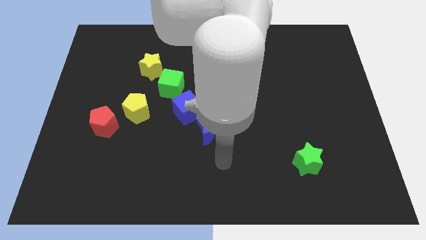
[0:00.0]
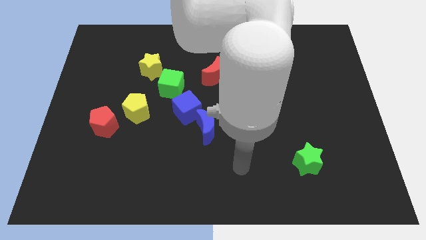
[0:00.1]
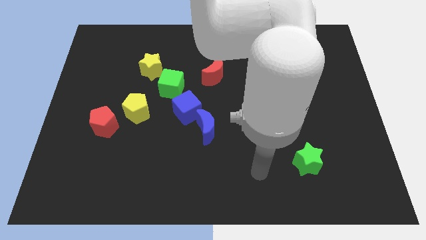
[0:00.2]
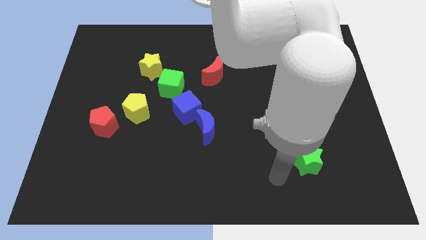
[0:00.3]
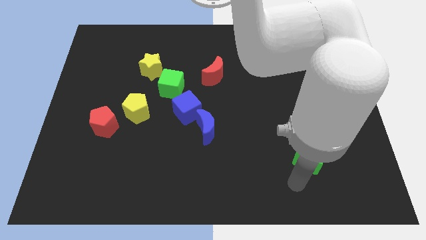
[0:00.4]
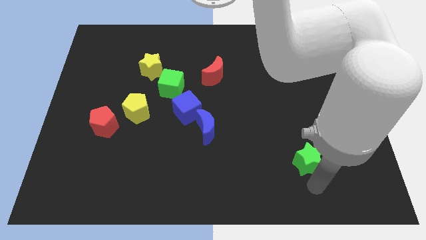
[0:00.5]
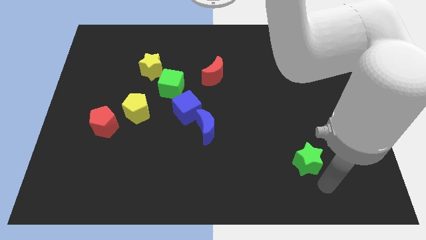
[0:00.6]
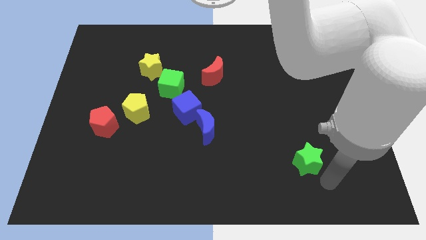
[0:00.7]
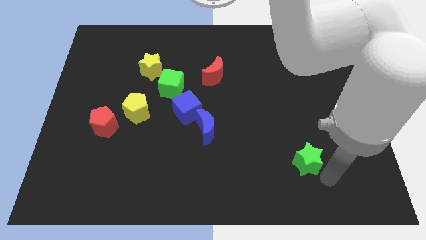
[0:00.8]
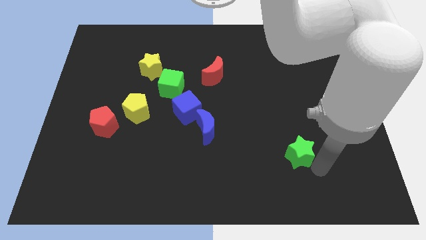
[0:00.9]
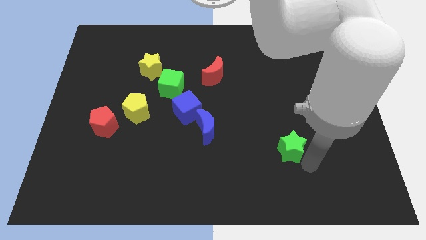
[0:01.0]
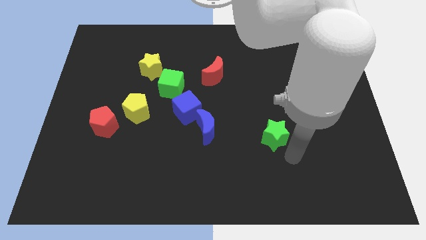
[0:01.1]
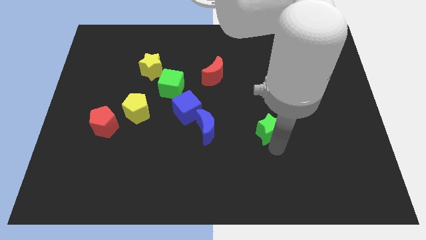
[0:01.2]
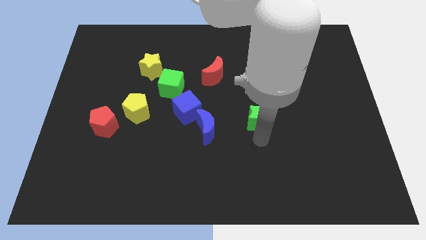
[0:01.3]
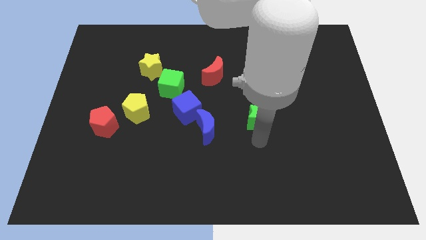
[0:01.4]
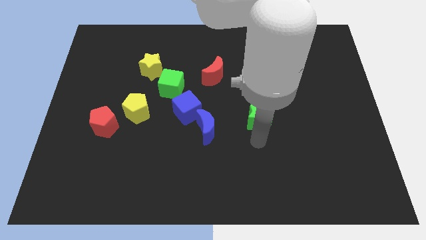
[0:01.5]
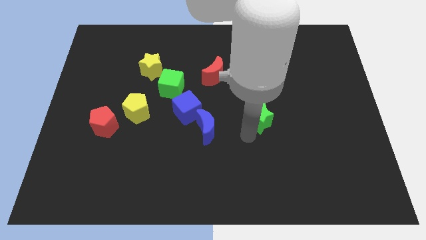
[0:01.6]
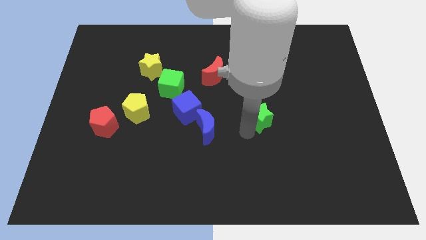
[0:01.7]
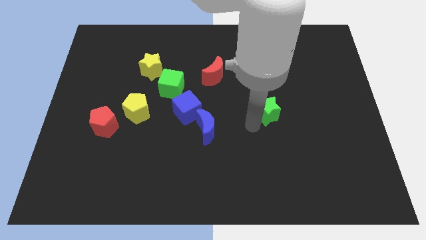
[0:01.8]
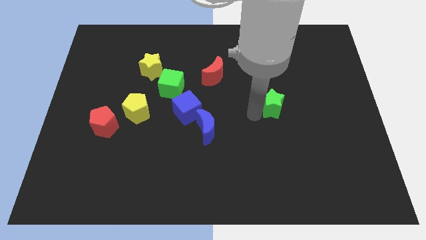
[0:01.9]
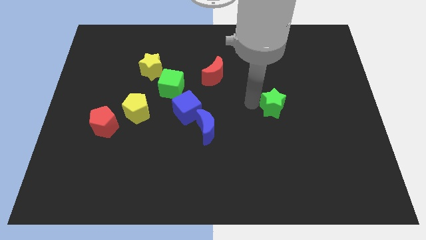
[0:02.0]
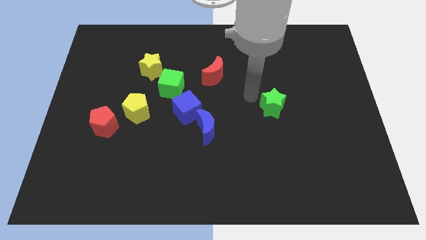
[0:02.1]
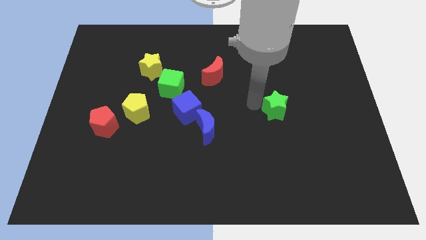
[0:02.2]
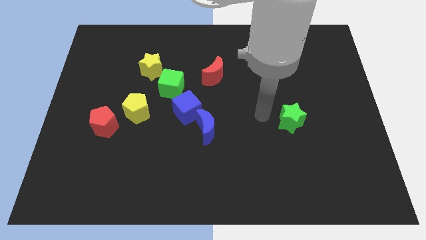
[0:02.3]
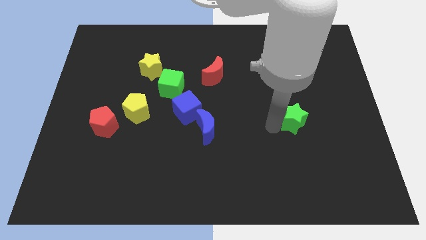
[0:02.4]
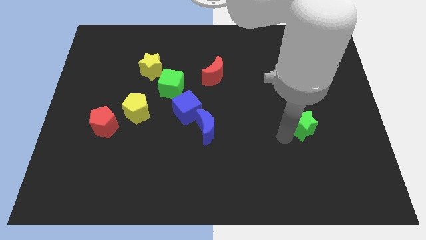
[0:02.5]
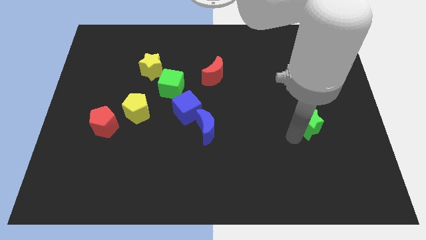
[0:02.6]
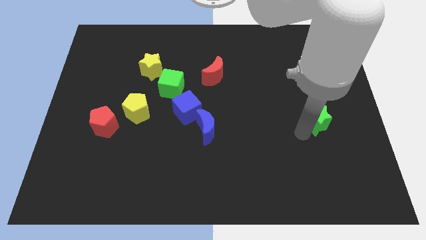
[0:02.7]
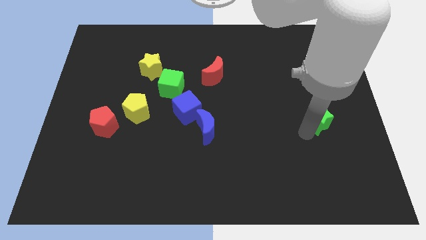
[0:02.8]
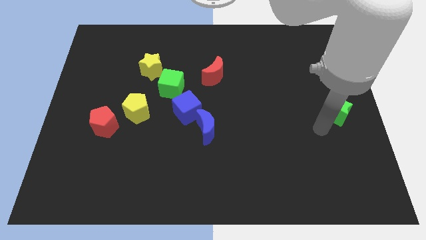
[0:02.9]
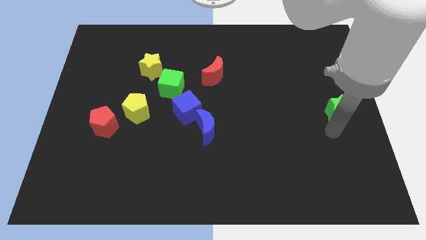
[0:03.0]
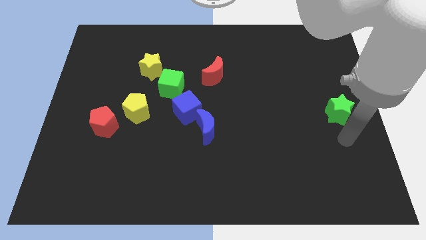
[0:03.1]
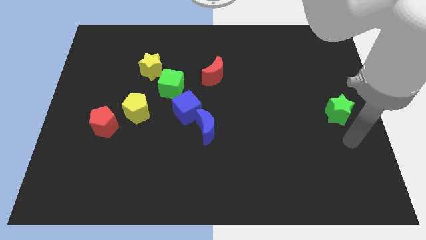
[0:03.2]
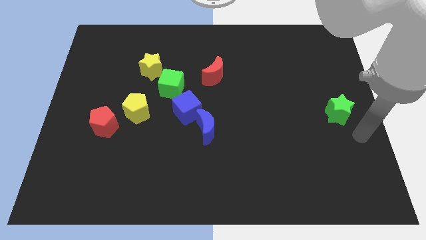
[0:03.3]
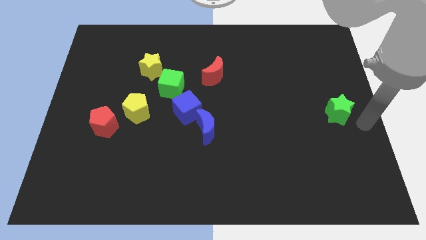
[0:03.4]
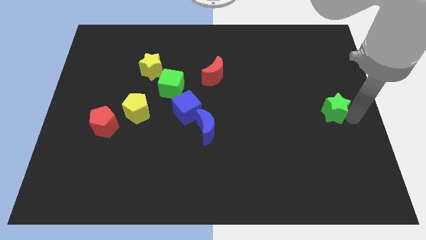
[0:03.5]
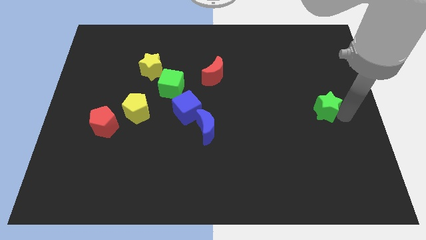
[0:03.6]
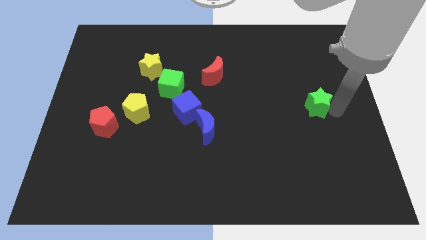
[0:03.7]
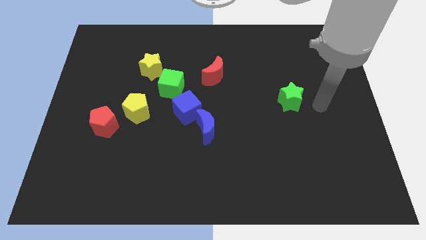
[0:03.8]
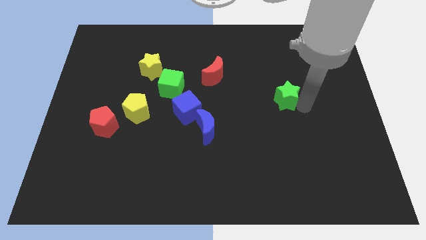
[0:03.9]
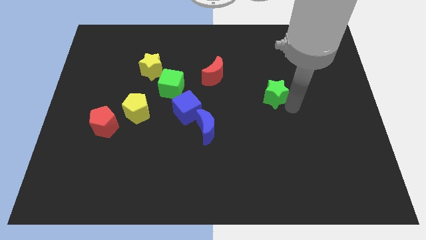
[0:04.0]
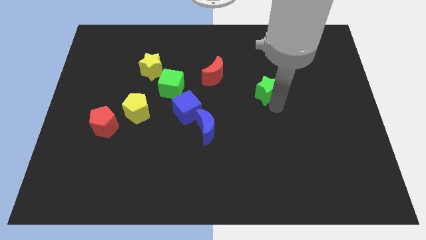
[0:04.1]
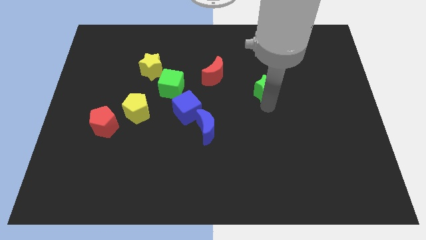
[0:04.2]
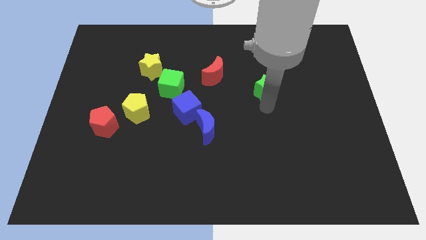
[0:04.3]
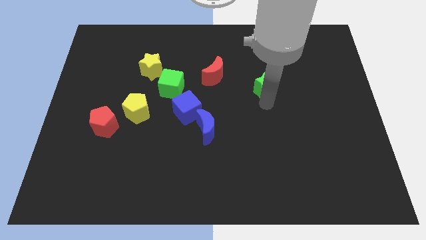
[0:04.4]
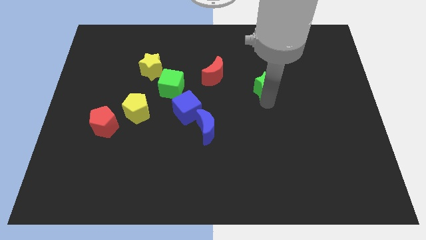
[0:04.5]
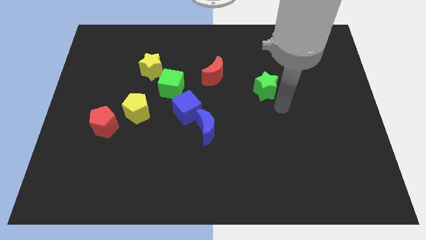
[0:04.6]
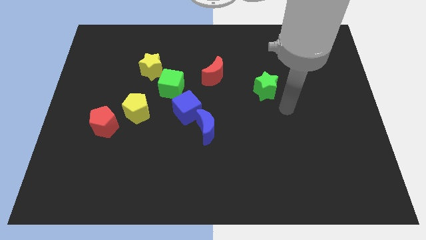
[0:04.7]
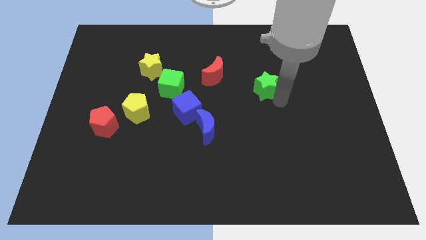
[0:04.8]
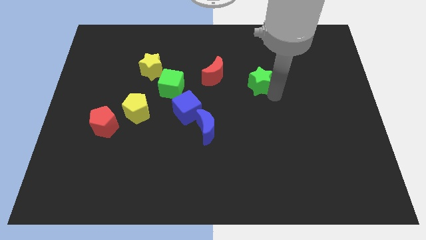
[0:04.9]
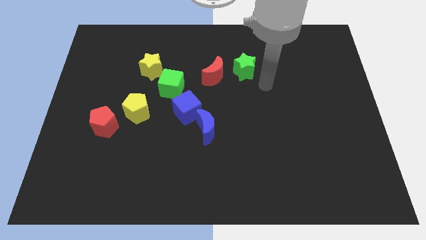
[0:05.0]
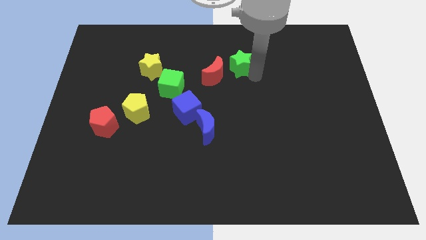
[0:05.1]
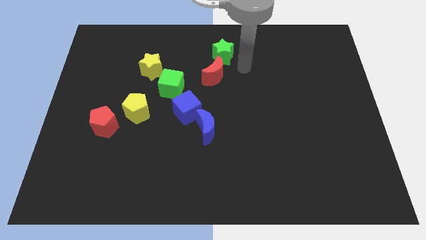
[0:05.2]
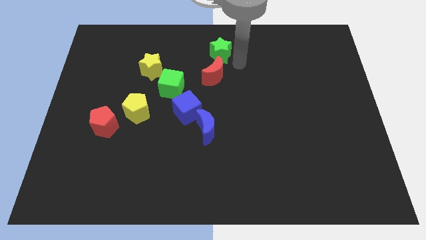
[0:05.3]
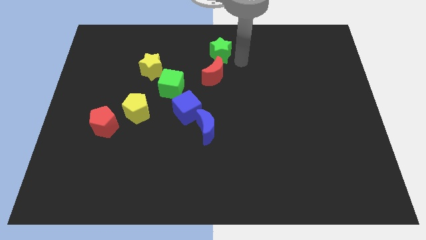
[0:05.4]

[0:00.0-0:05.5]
push the green star above the red crescent

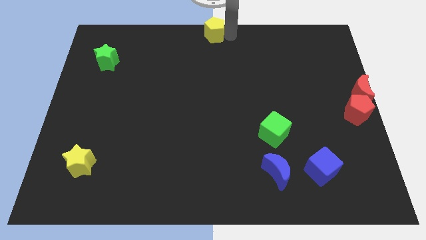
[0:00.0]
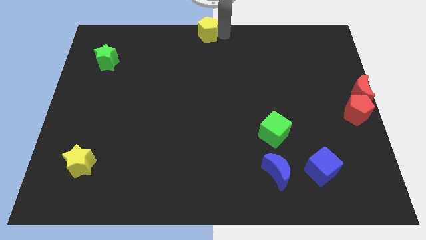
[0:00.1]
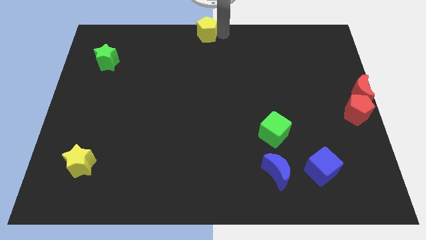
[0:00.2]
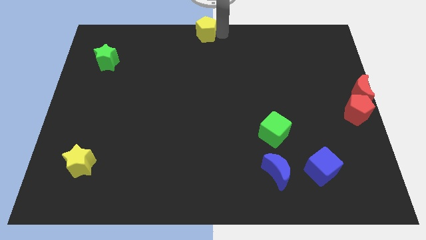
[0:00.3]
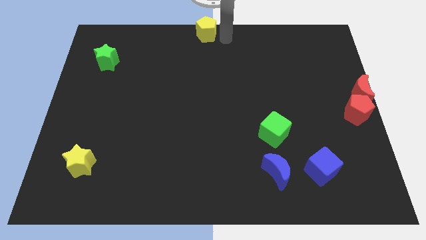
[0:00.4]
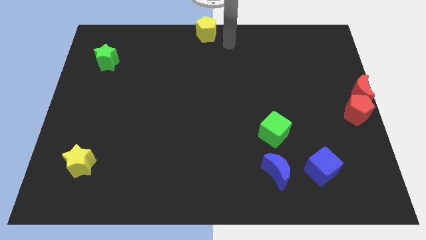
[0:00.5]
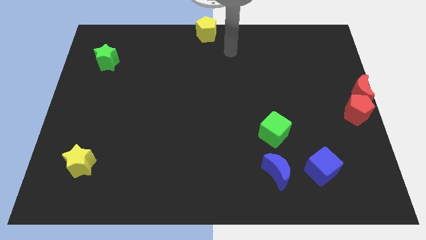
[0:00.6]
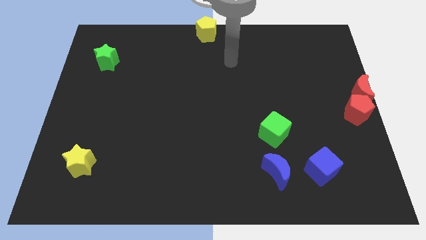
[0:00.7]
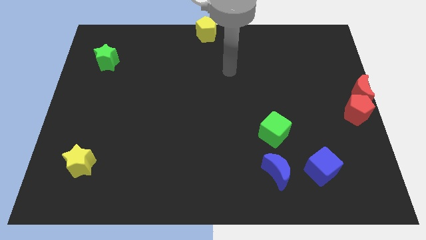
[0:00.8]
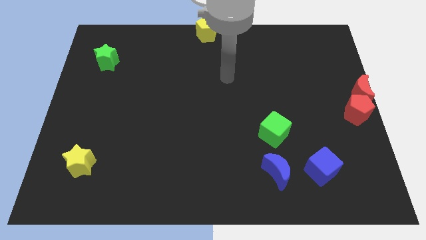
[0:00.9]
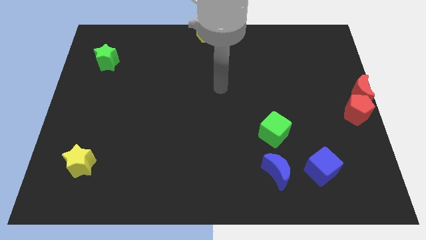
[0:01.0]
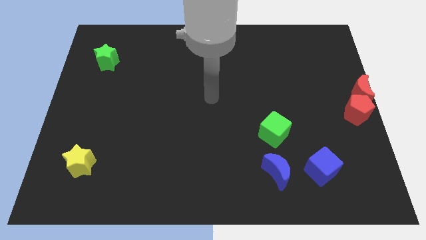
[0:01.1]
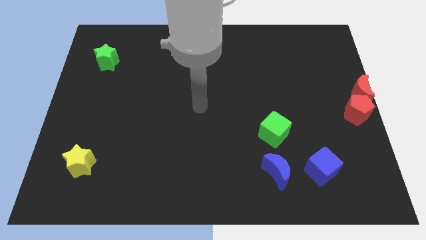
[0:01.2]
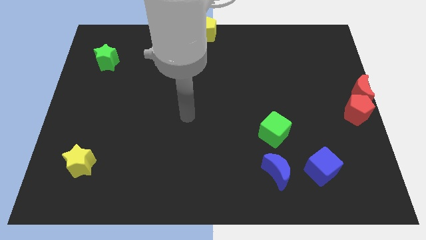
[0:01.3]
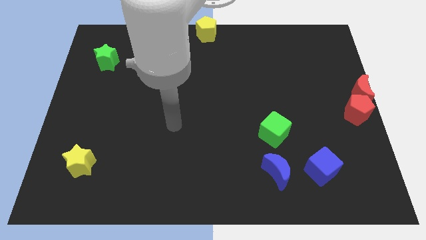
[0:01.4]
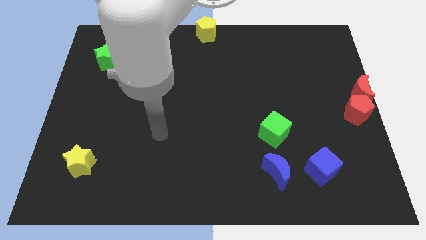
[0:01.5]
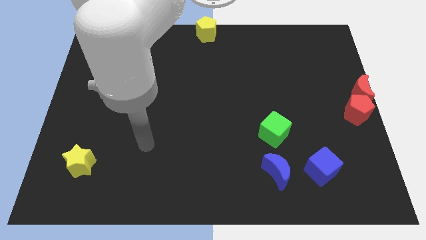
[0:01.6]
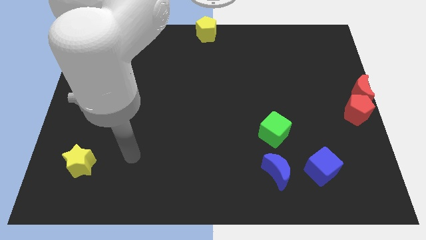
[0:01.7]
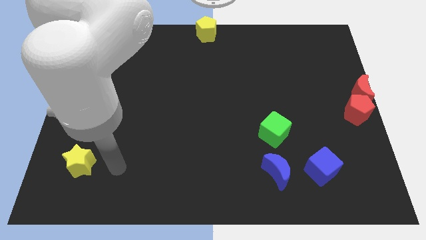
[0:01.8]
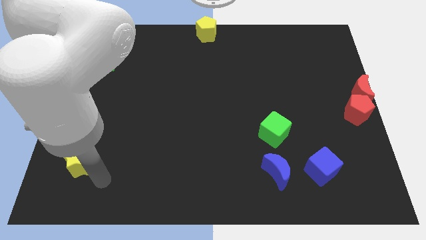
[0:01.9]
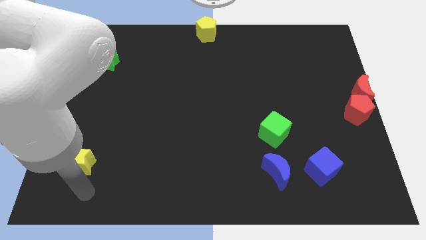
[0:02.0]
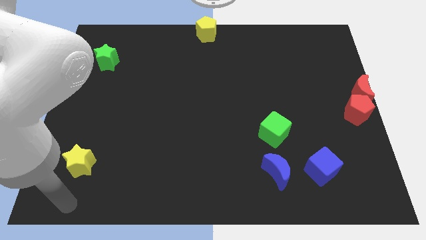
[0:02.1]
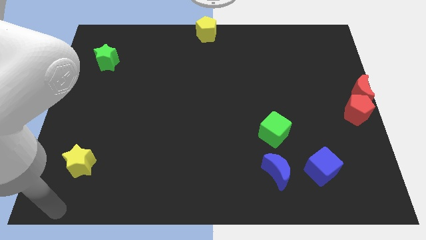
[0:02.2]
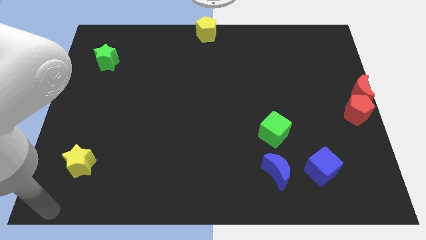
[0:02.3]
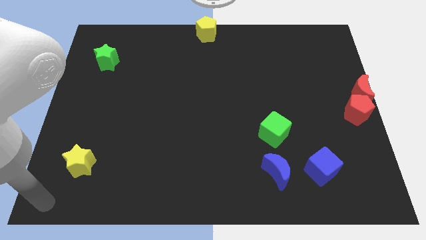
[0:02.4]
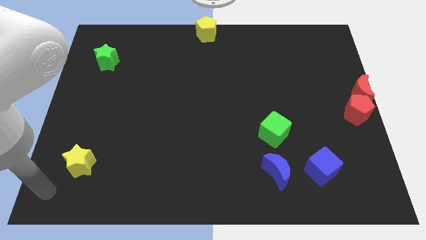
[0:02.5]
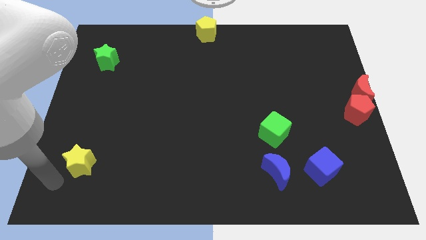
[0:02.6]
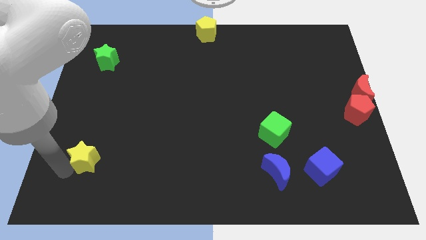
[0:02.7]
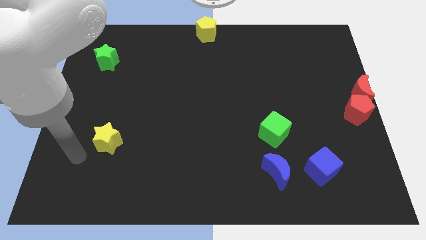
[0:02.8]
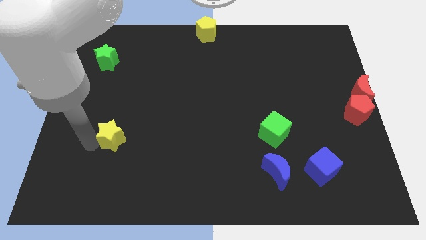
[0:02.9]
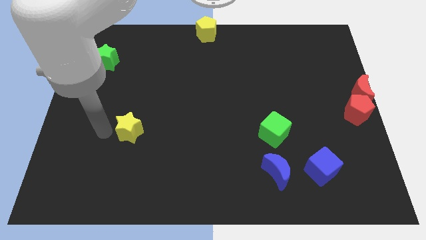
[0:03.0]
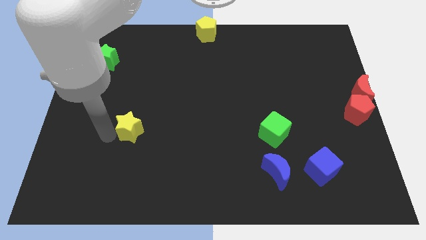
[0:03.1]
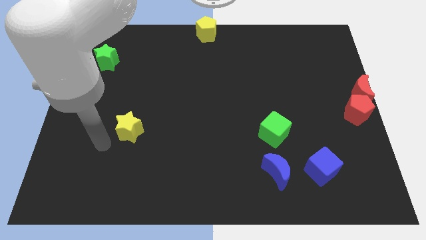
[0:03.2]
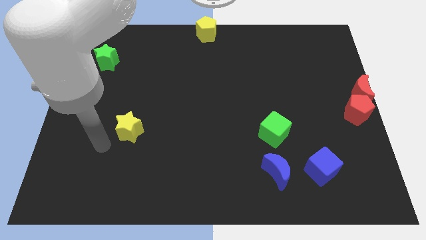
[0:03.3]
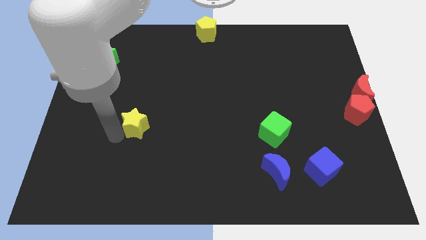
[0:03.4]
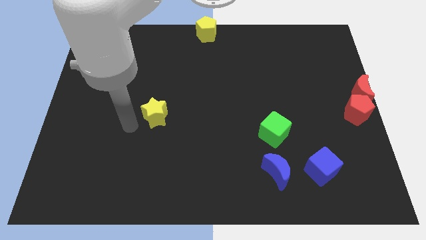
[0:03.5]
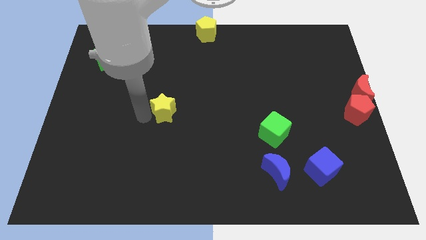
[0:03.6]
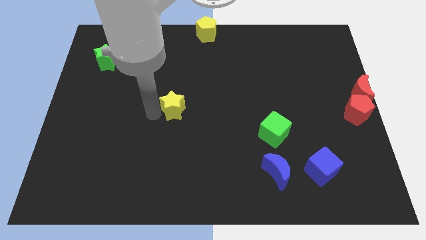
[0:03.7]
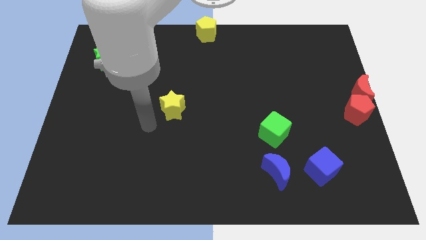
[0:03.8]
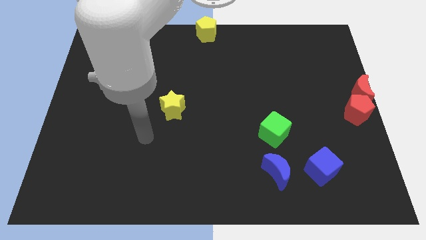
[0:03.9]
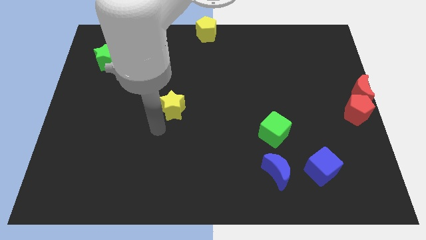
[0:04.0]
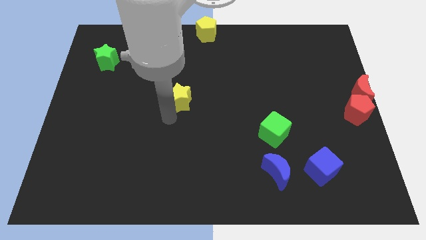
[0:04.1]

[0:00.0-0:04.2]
push the yellow star at the top center
